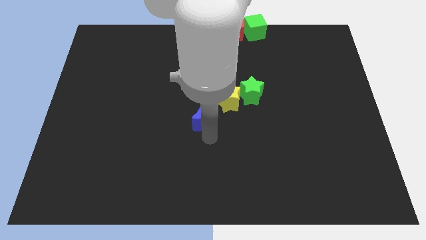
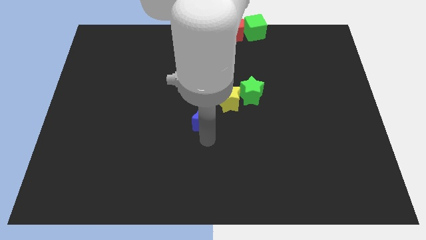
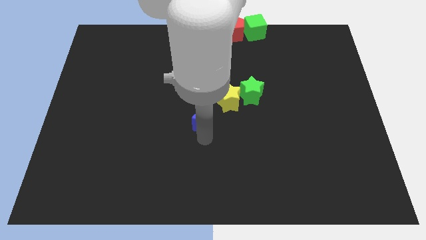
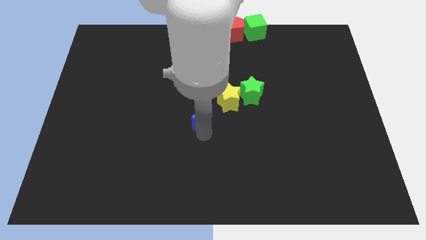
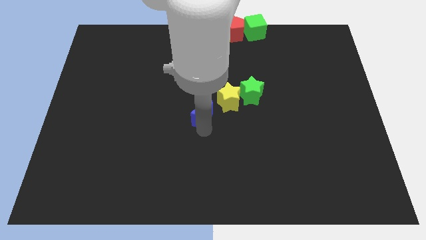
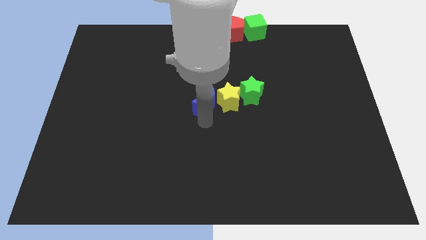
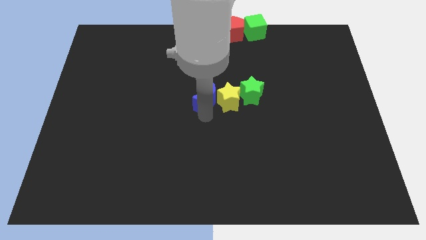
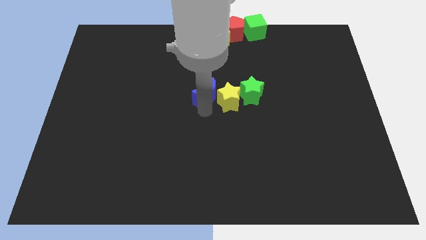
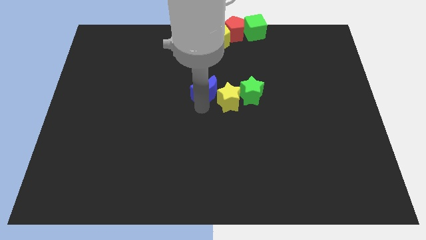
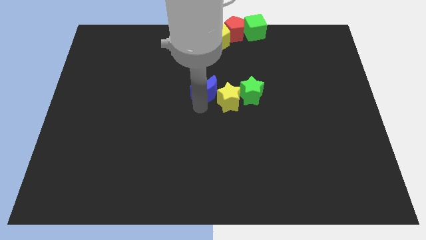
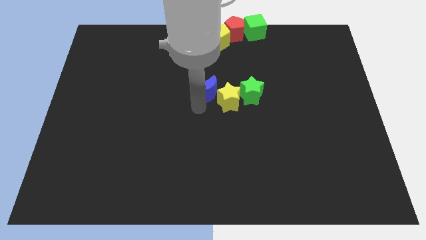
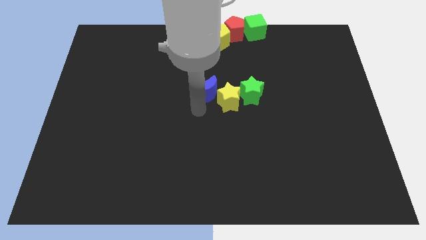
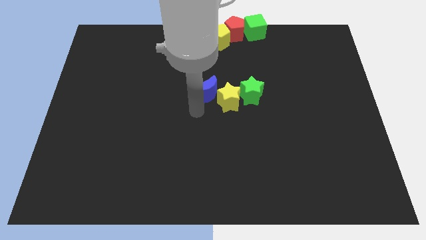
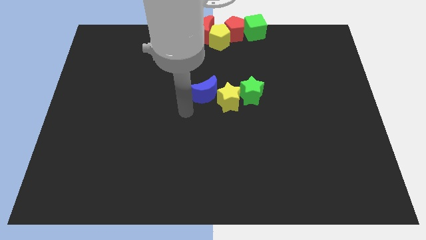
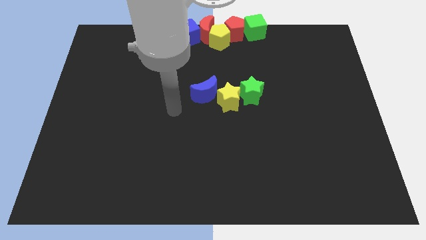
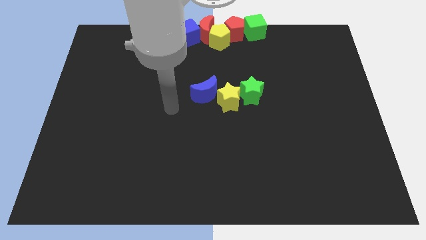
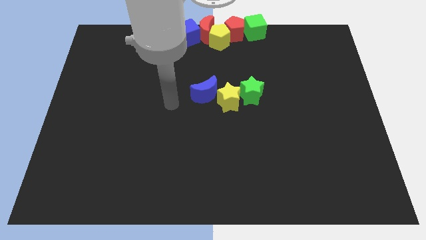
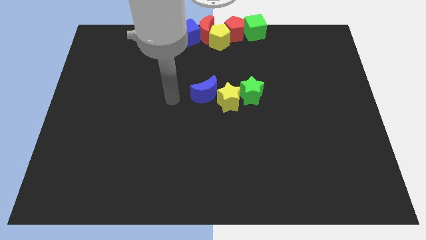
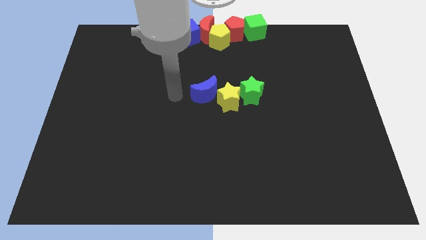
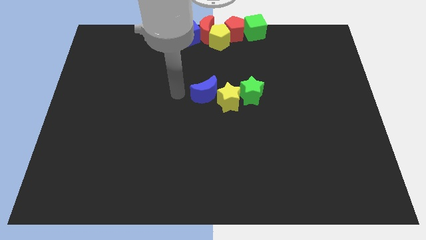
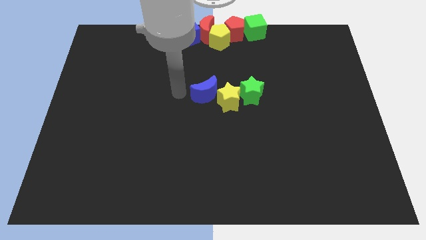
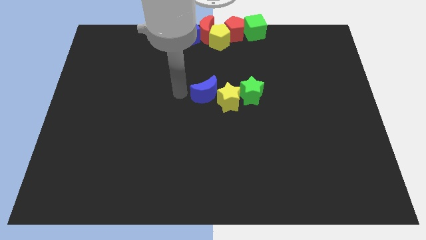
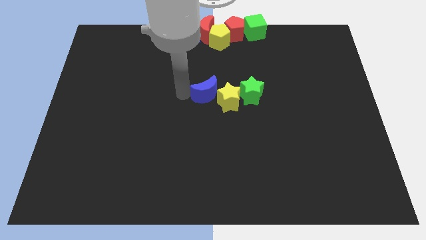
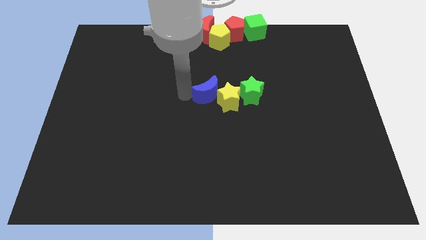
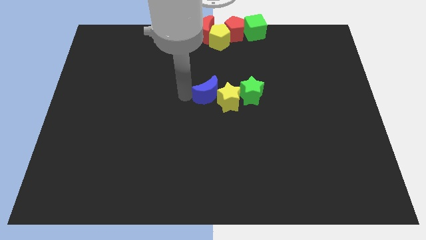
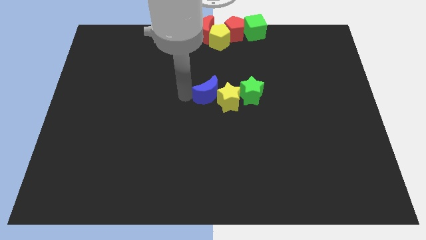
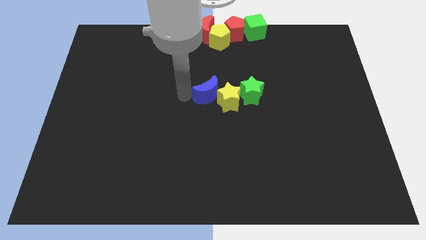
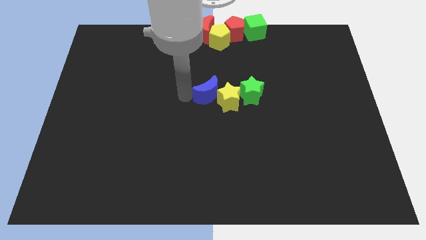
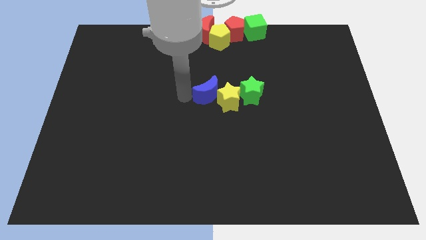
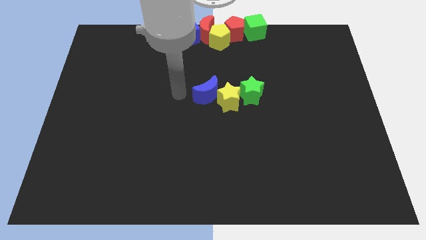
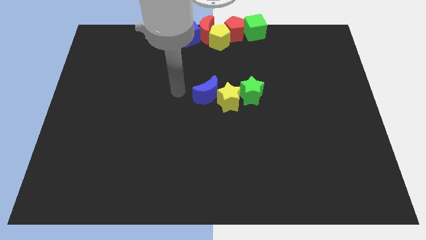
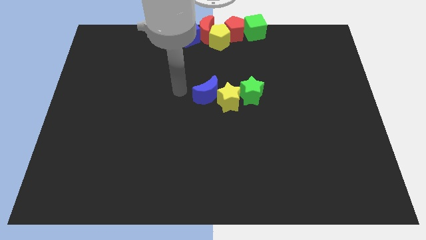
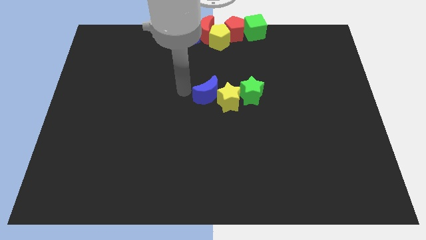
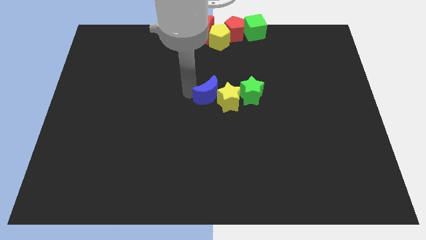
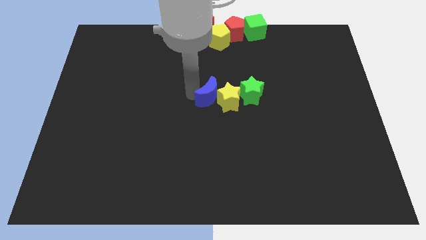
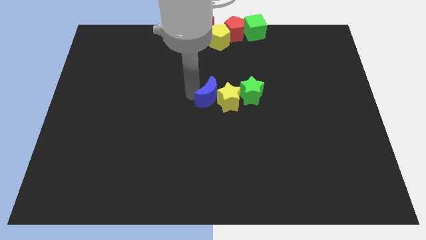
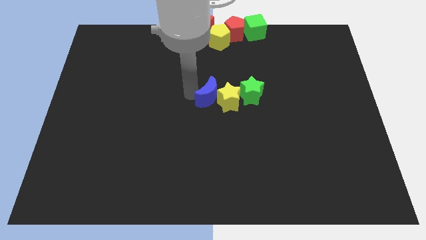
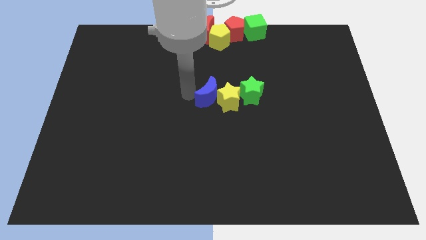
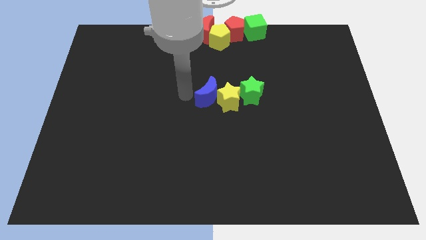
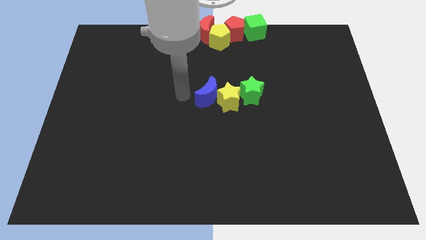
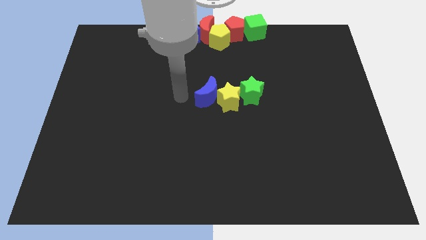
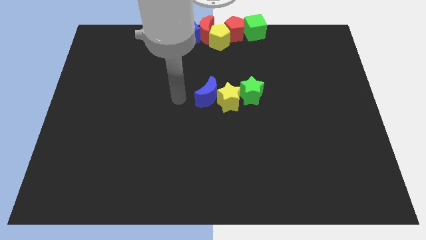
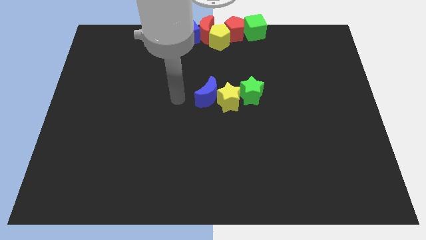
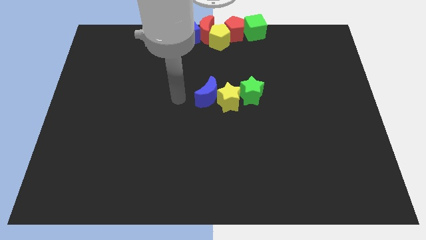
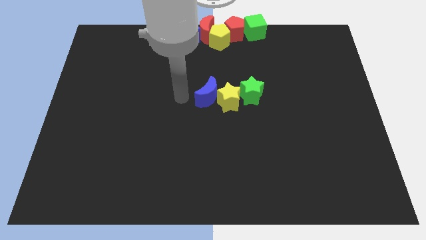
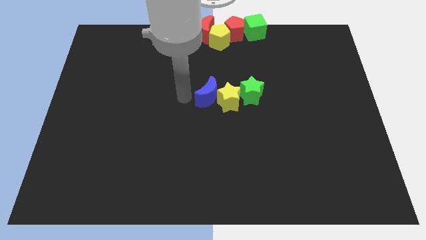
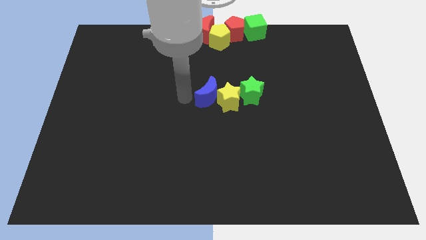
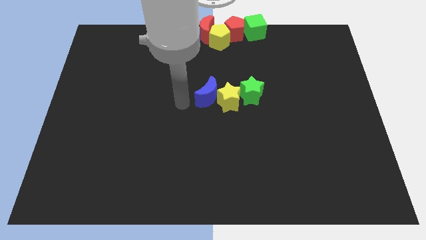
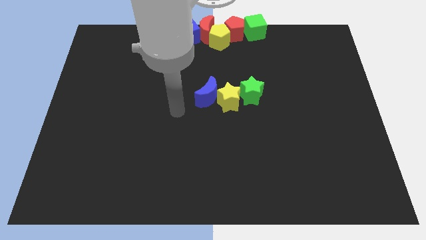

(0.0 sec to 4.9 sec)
move the blue crescent into the yellow star

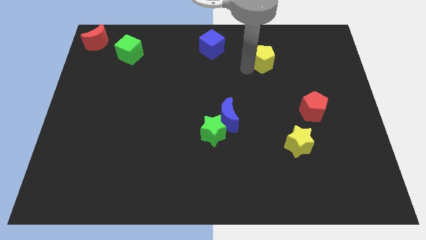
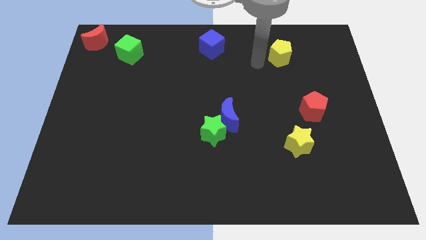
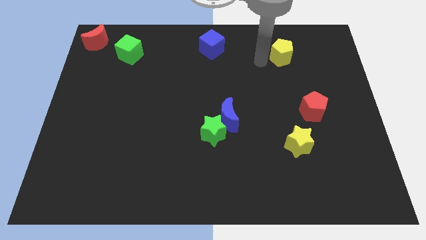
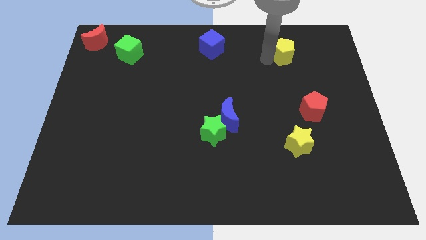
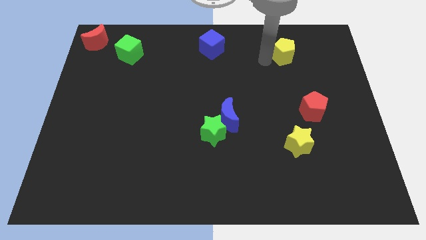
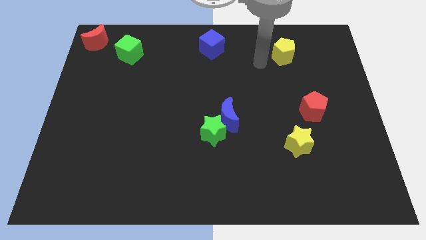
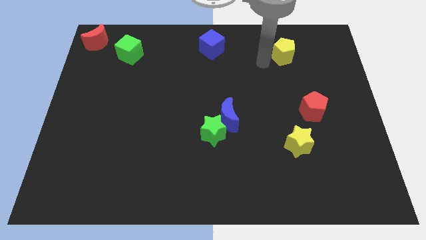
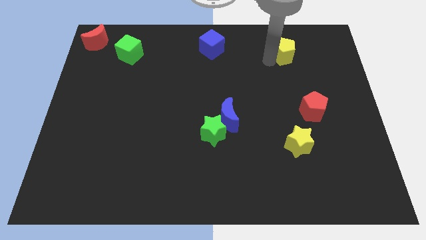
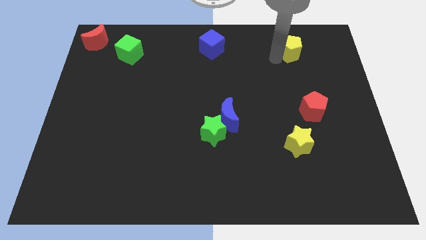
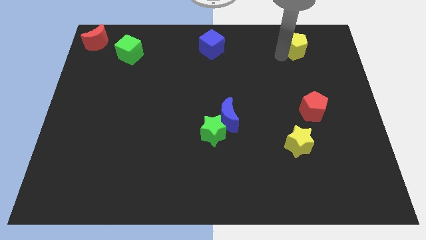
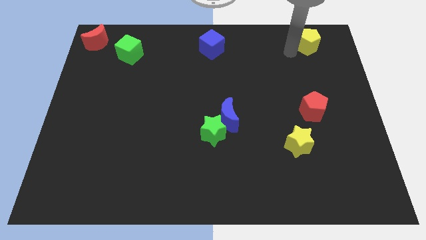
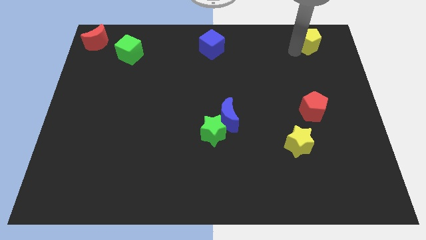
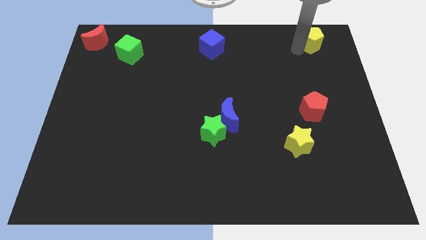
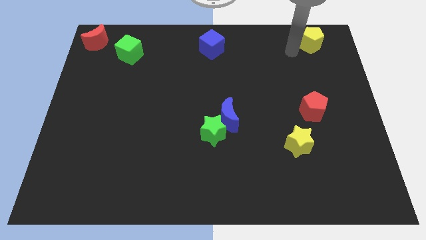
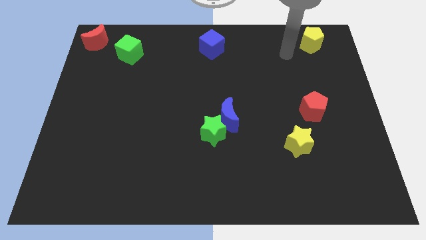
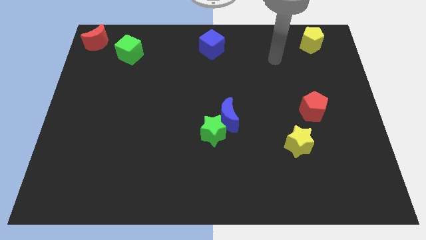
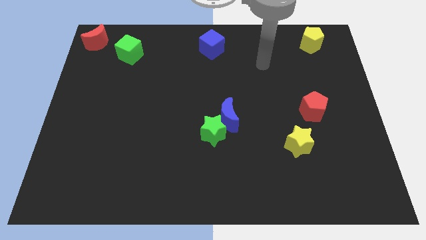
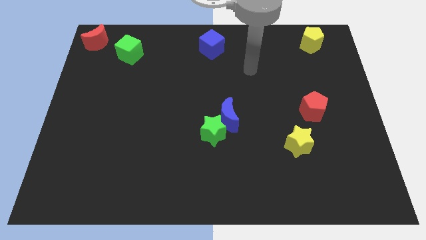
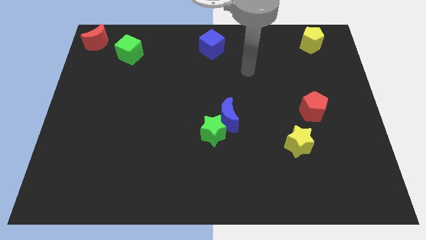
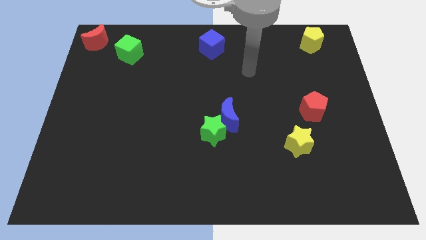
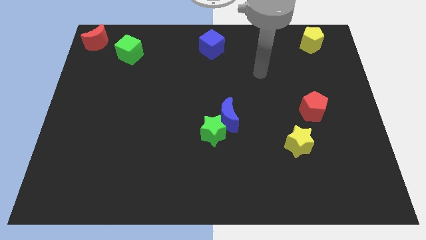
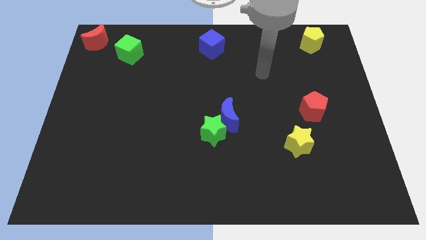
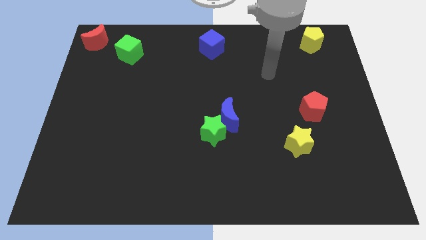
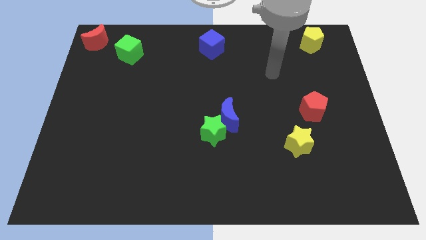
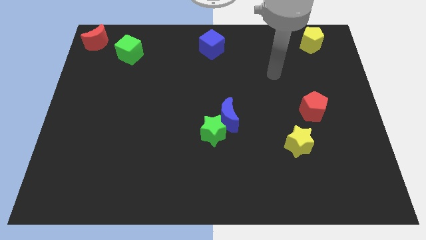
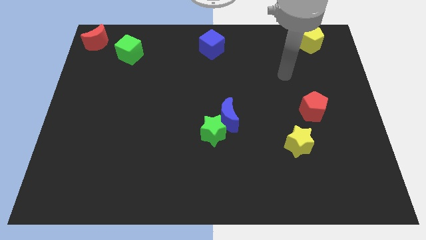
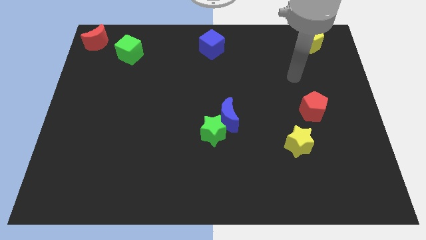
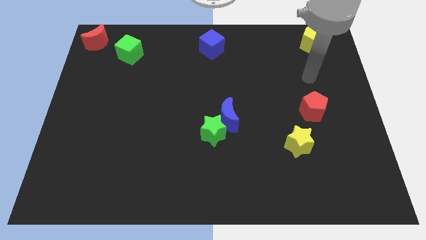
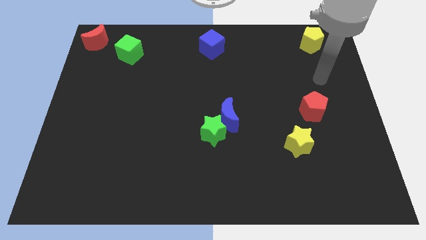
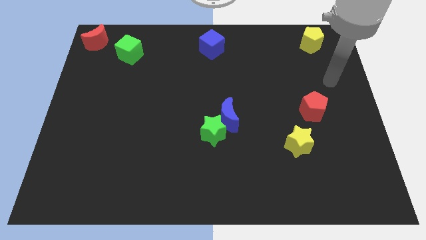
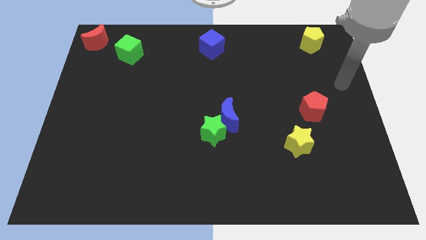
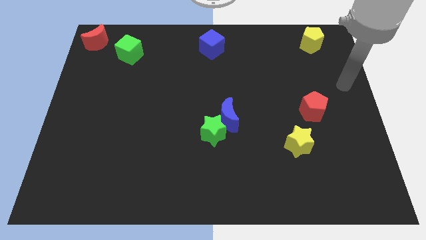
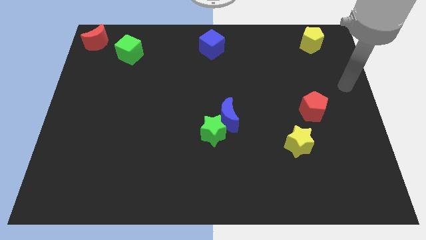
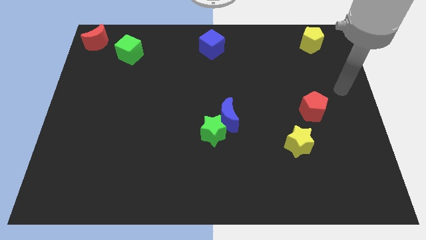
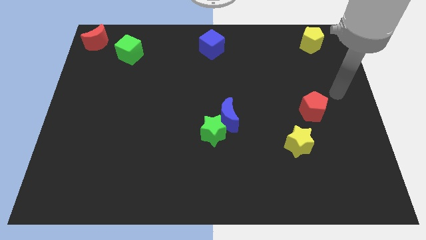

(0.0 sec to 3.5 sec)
move the yellow pentagon to the top right corner of the board

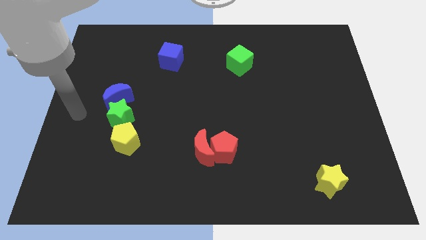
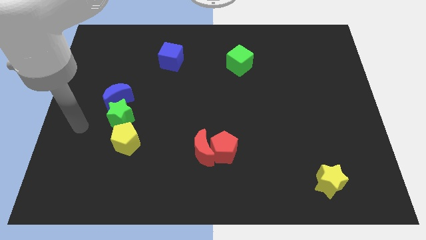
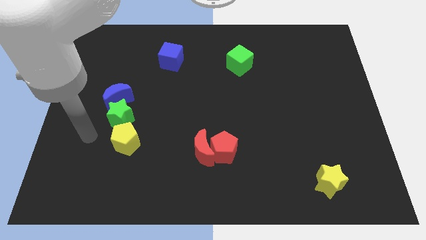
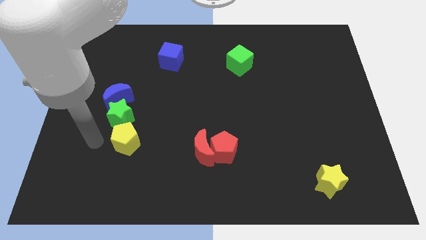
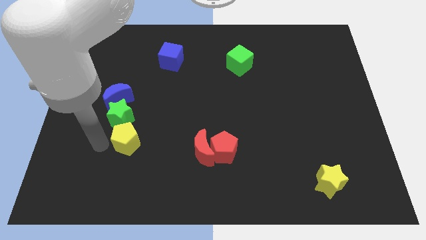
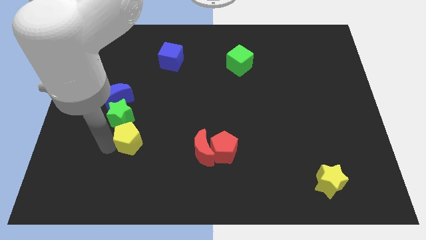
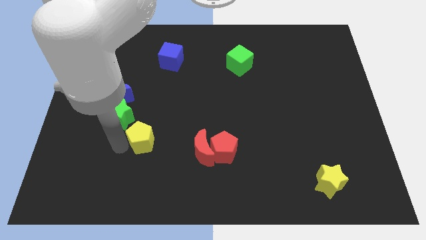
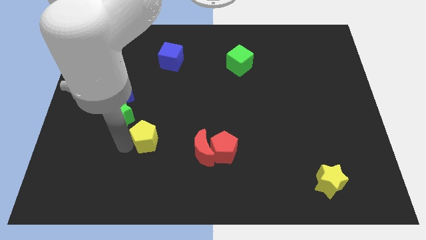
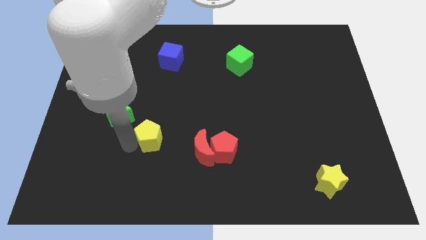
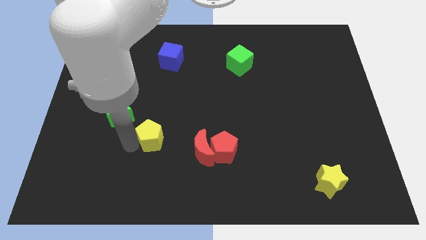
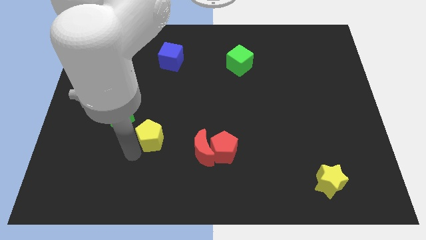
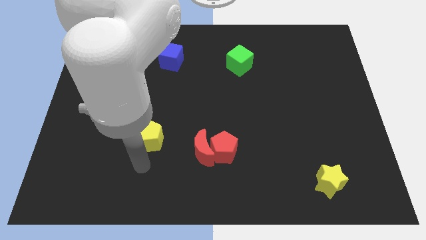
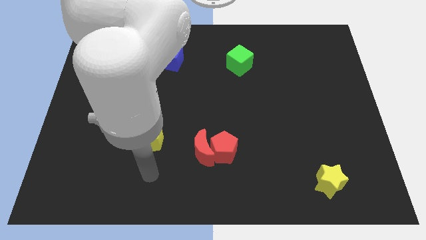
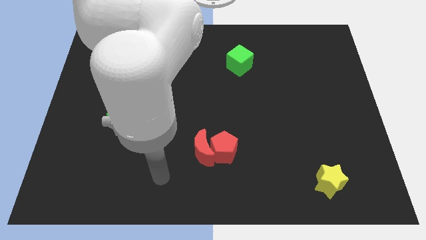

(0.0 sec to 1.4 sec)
push the yellow pentagon away from the green star
